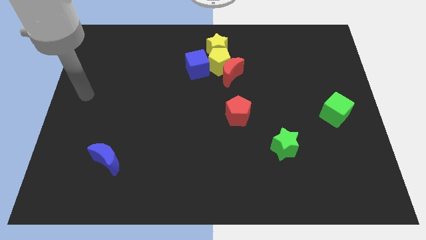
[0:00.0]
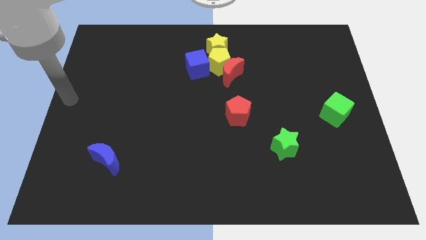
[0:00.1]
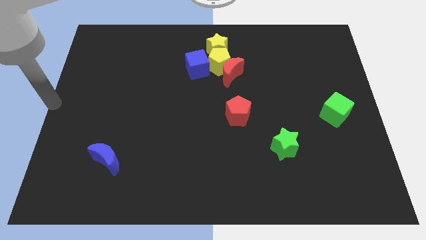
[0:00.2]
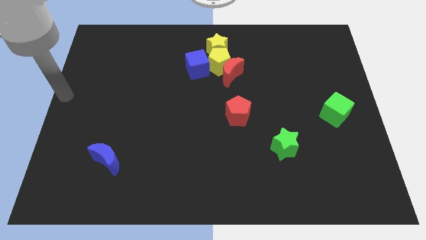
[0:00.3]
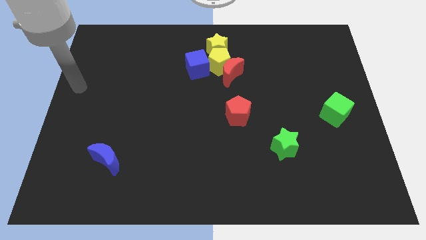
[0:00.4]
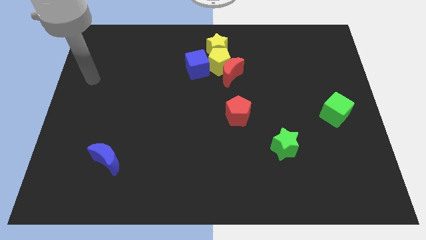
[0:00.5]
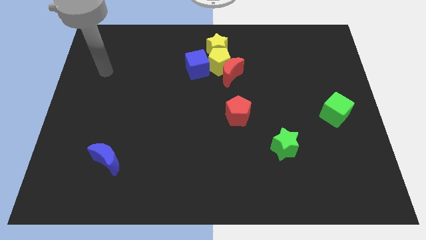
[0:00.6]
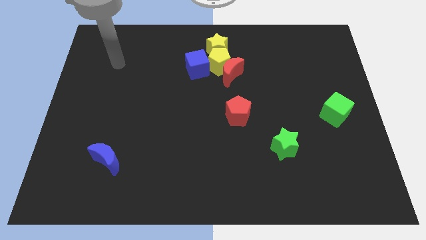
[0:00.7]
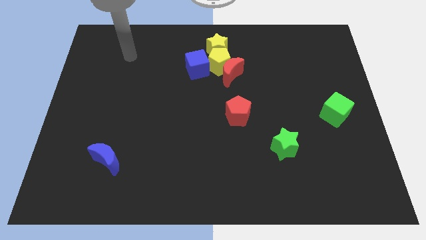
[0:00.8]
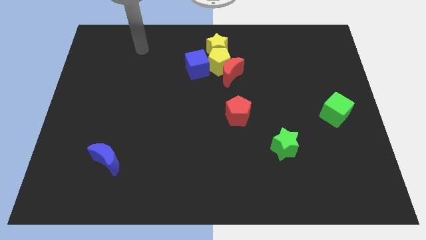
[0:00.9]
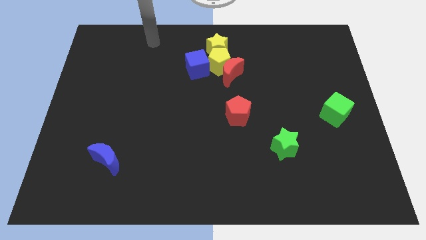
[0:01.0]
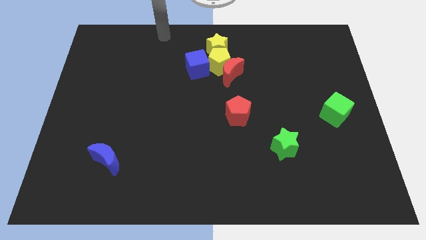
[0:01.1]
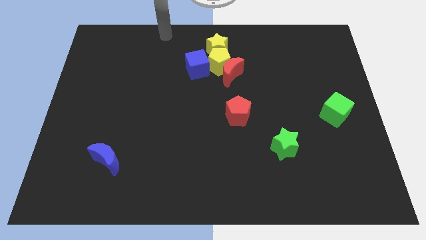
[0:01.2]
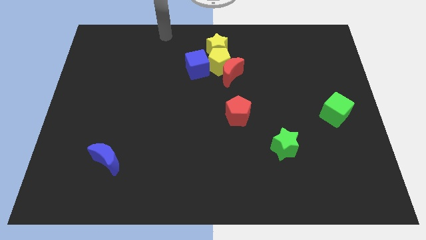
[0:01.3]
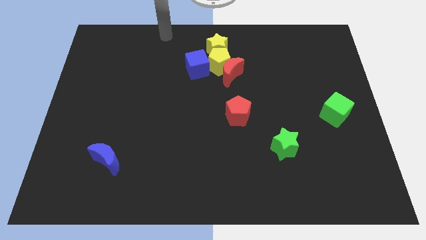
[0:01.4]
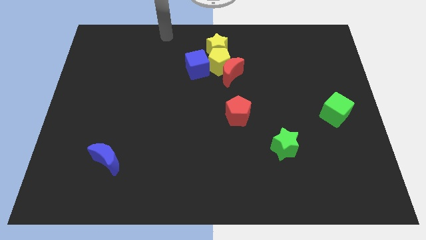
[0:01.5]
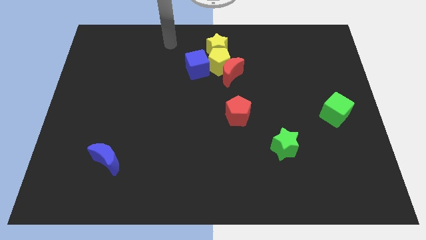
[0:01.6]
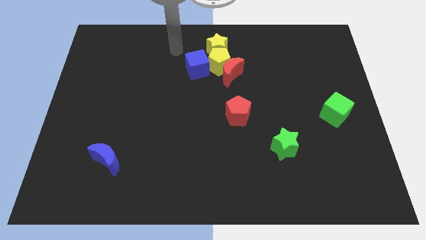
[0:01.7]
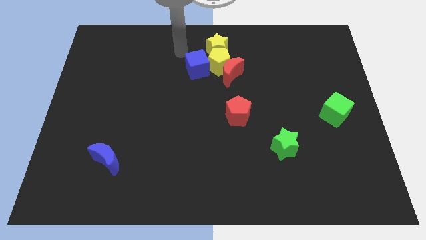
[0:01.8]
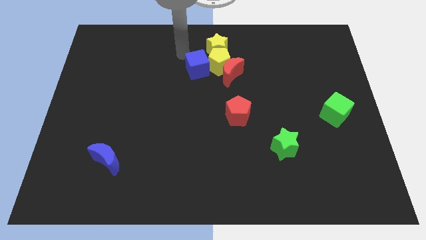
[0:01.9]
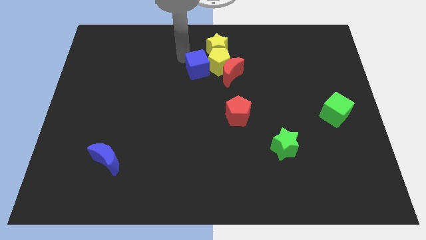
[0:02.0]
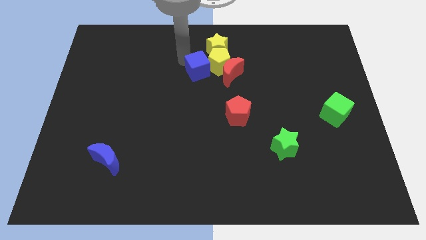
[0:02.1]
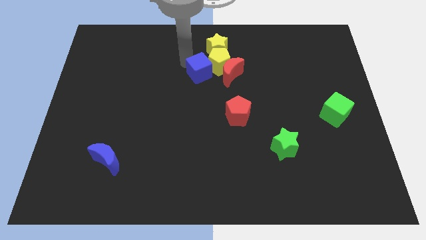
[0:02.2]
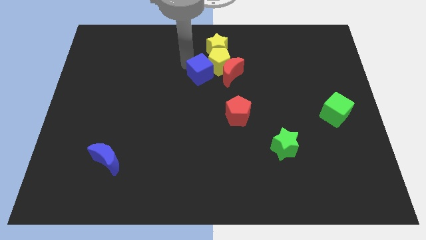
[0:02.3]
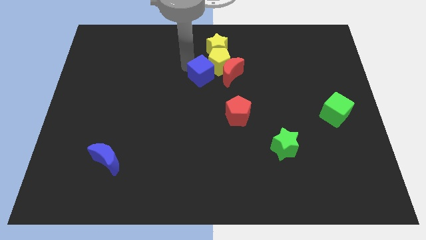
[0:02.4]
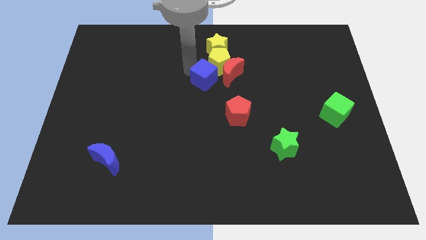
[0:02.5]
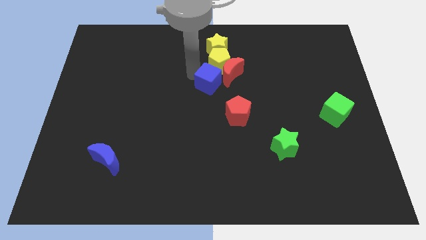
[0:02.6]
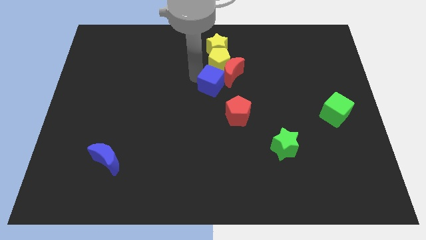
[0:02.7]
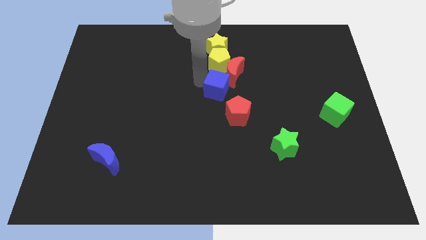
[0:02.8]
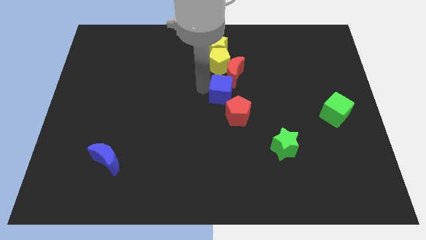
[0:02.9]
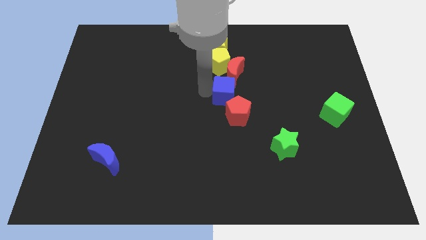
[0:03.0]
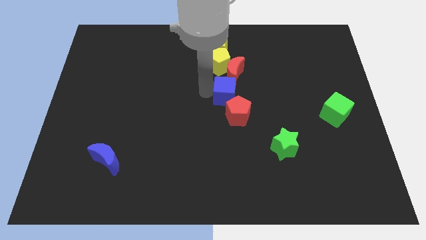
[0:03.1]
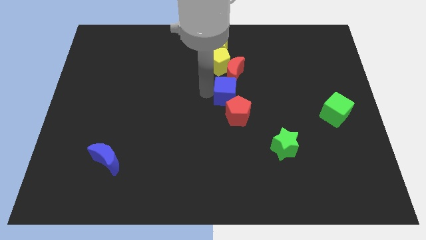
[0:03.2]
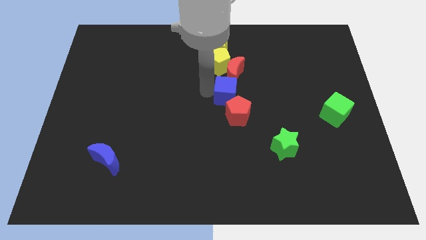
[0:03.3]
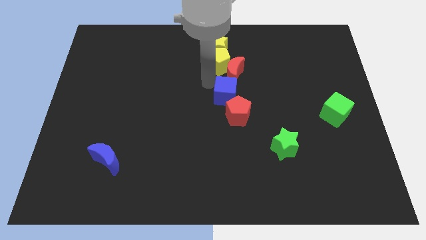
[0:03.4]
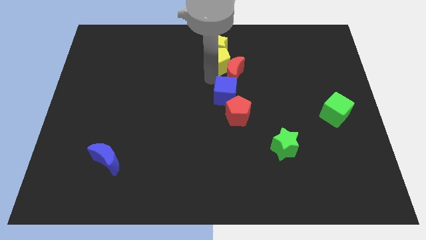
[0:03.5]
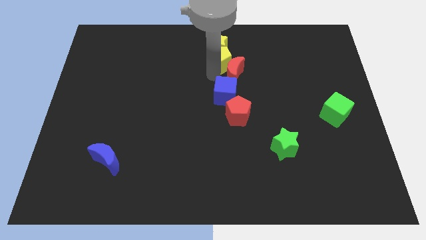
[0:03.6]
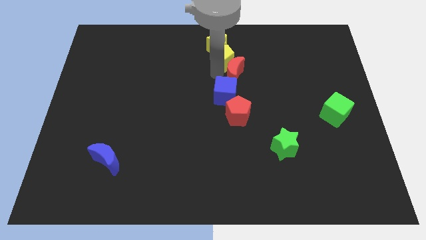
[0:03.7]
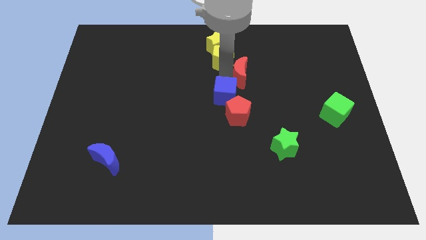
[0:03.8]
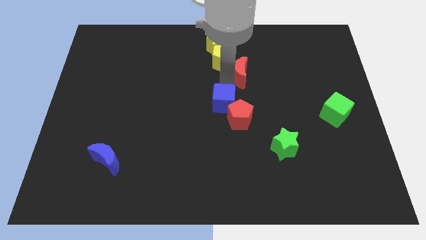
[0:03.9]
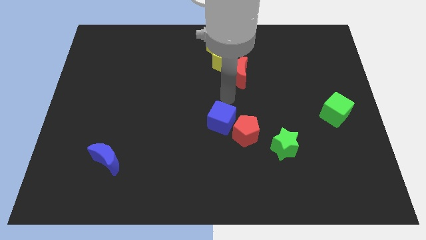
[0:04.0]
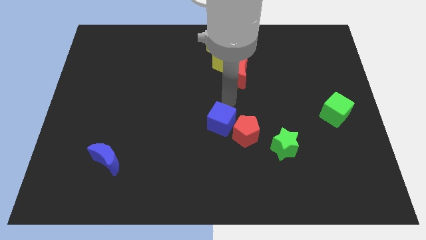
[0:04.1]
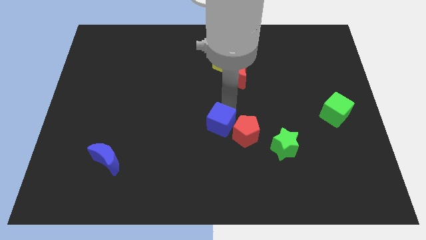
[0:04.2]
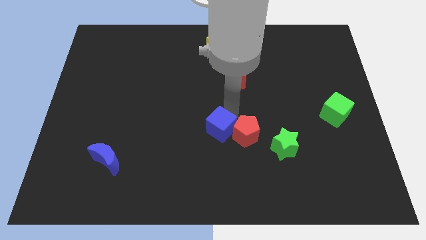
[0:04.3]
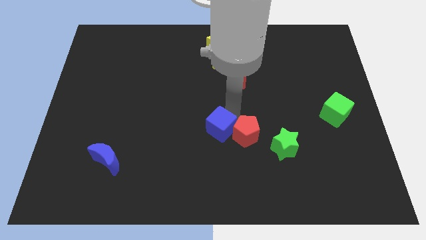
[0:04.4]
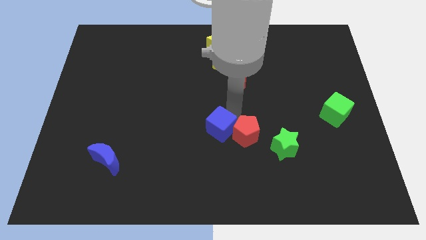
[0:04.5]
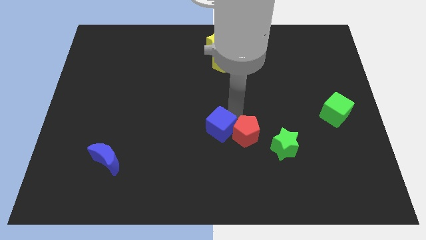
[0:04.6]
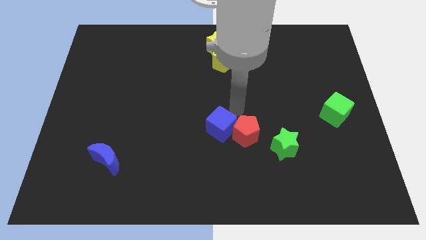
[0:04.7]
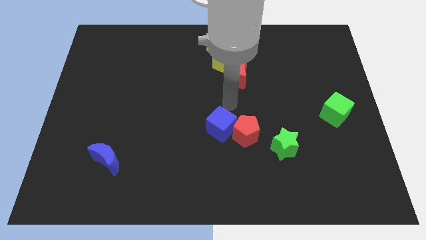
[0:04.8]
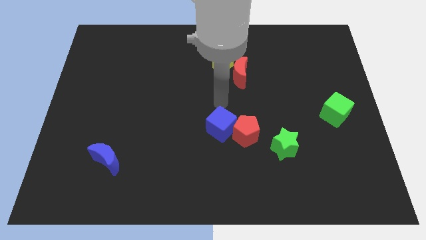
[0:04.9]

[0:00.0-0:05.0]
place the blue cube left of red pentagon

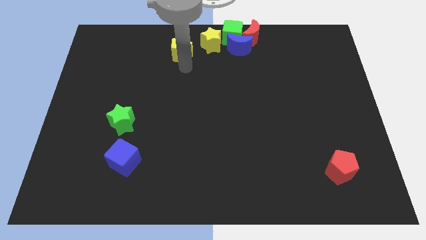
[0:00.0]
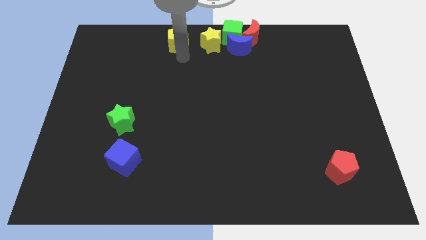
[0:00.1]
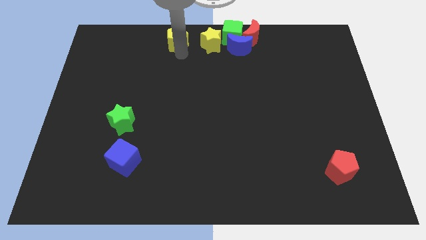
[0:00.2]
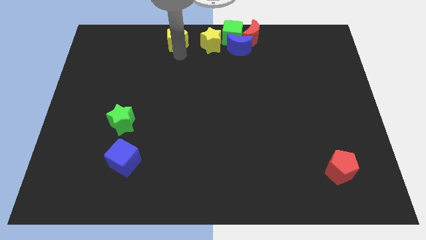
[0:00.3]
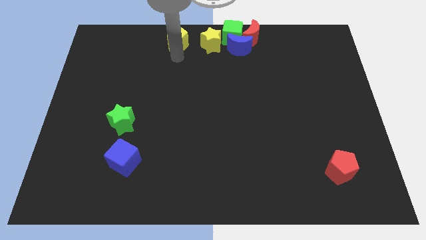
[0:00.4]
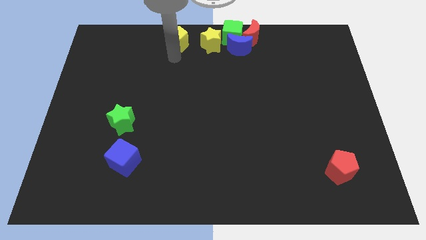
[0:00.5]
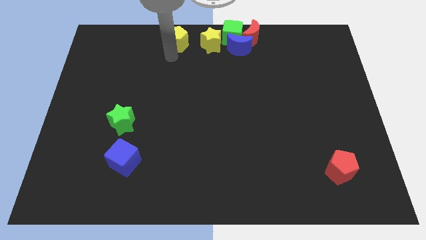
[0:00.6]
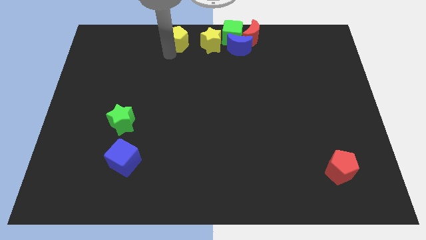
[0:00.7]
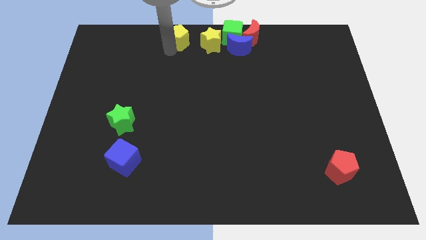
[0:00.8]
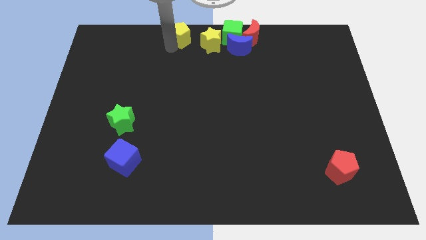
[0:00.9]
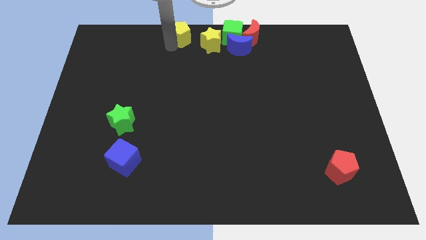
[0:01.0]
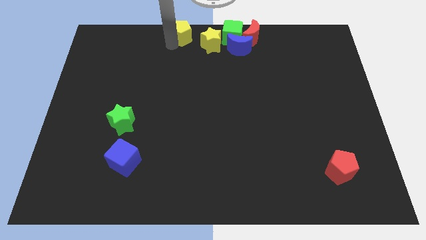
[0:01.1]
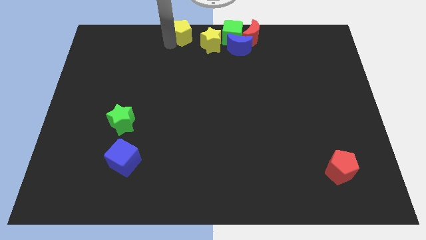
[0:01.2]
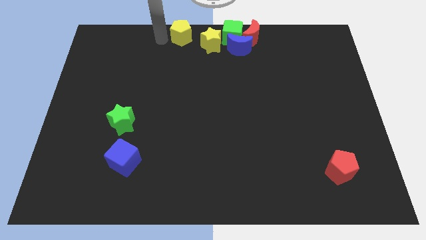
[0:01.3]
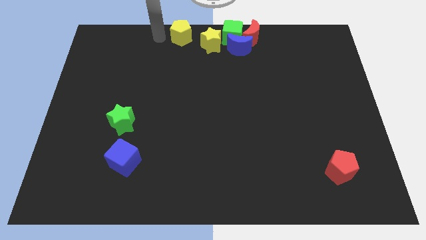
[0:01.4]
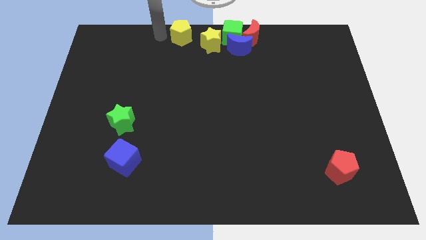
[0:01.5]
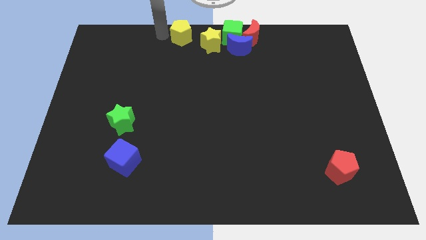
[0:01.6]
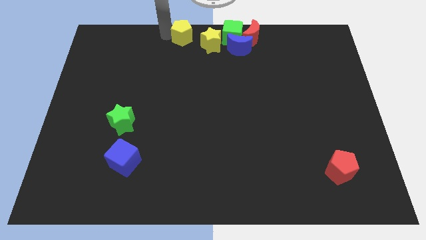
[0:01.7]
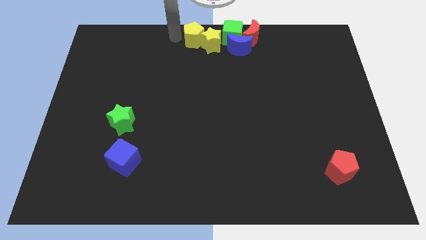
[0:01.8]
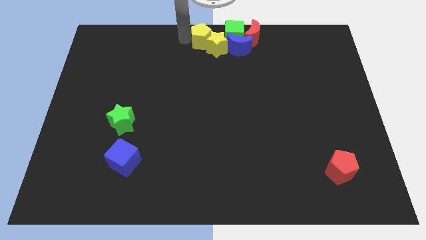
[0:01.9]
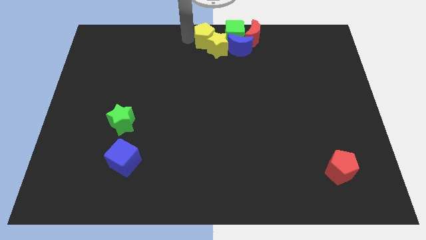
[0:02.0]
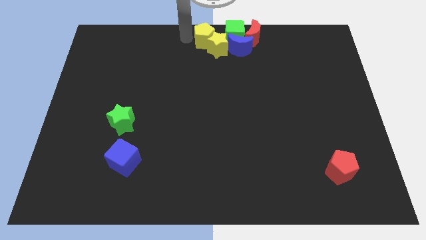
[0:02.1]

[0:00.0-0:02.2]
move the yellow pentagon near to the yellow star

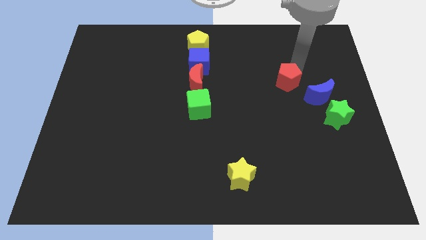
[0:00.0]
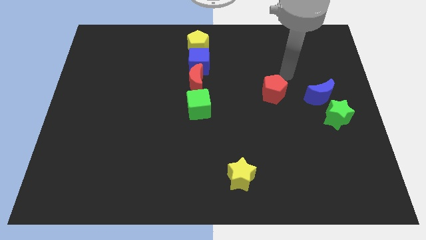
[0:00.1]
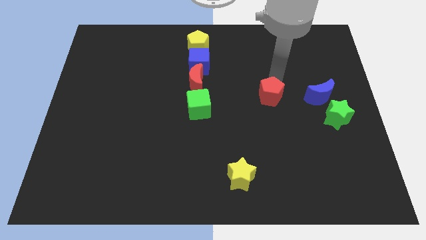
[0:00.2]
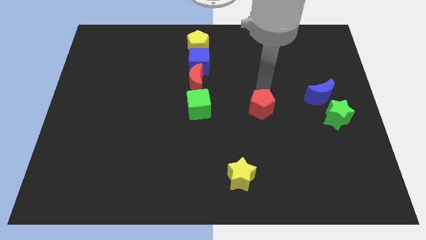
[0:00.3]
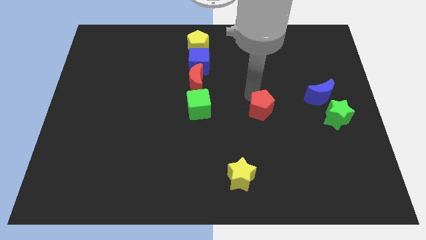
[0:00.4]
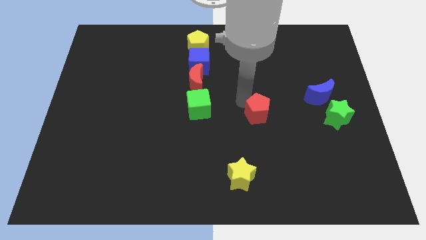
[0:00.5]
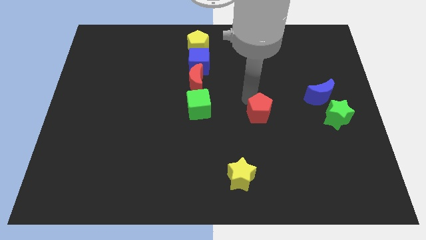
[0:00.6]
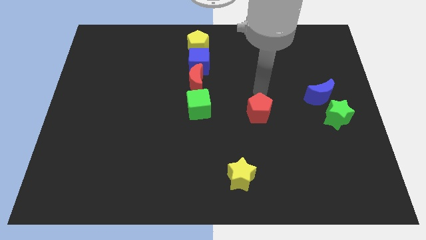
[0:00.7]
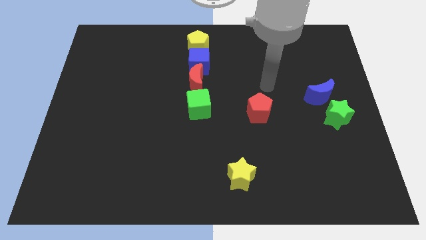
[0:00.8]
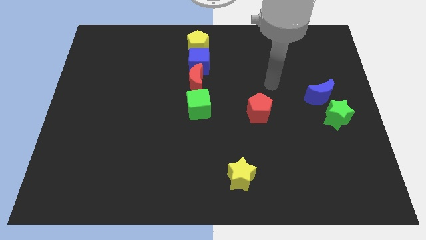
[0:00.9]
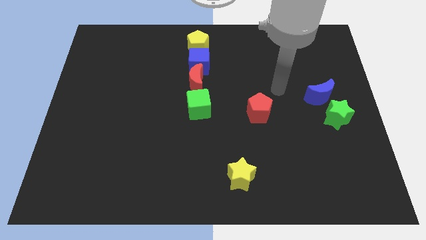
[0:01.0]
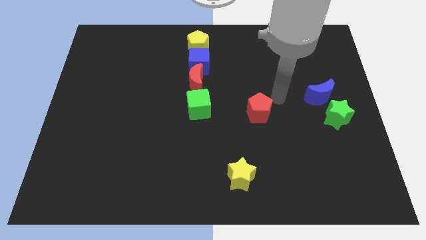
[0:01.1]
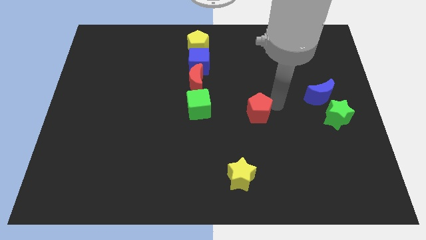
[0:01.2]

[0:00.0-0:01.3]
place the red pentagon above the yellow star

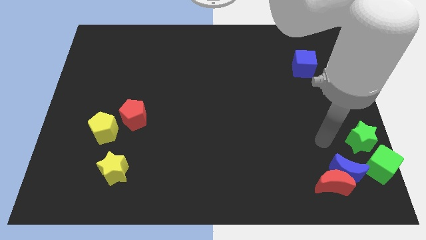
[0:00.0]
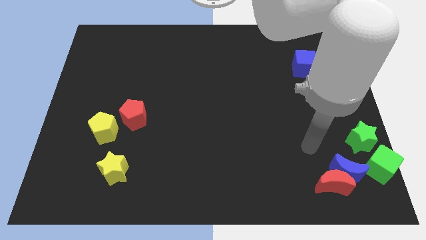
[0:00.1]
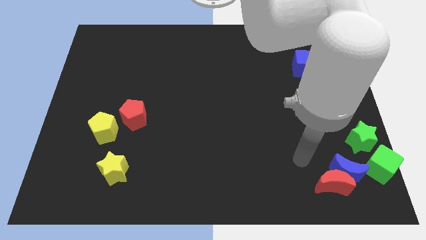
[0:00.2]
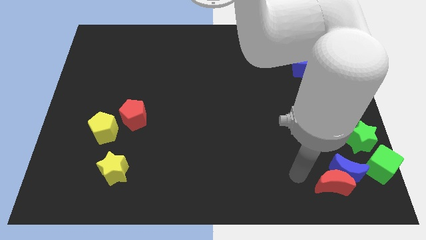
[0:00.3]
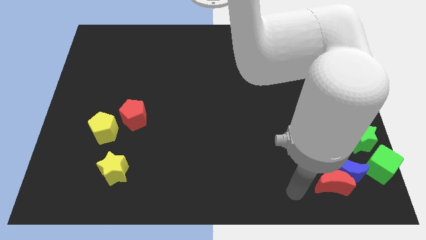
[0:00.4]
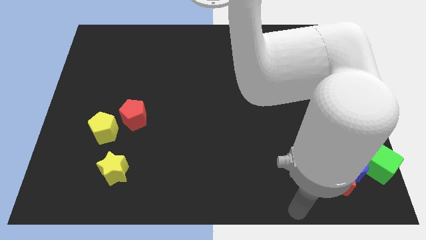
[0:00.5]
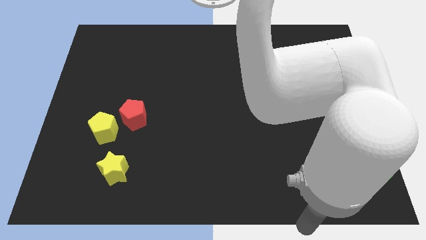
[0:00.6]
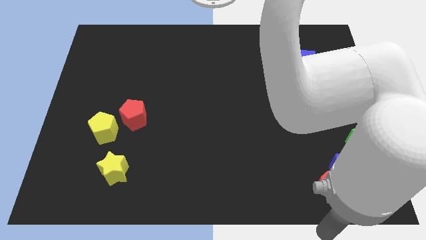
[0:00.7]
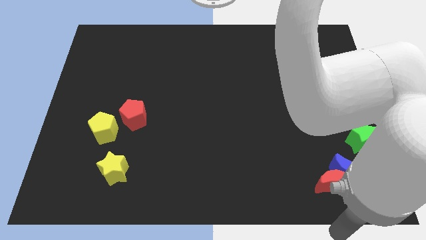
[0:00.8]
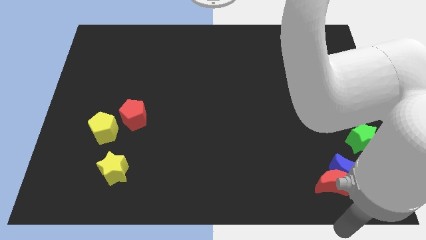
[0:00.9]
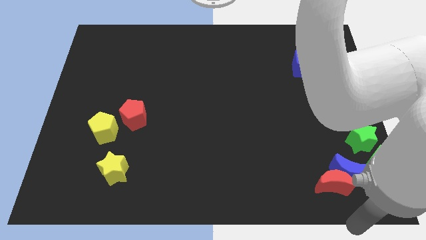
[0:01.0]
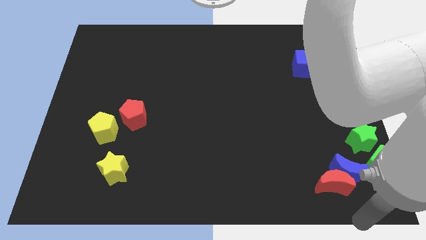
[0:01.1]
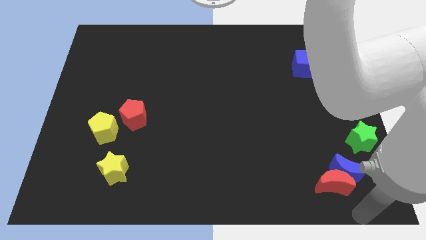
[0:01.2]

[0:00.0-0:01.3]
move your hand at the bottom left of the board
